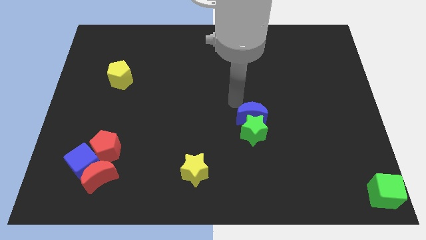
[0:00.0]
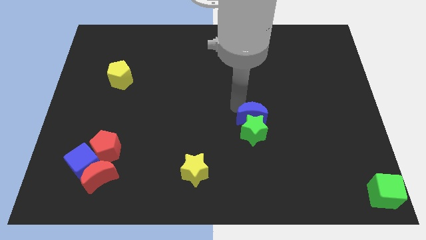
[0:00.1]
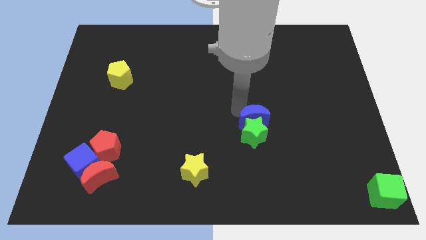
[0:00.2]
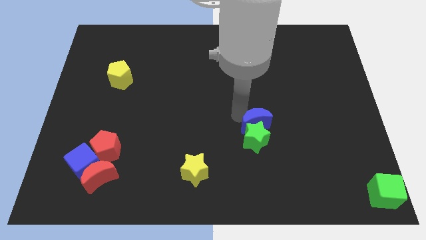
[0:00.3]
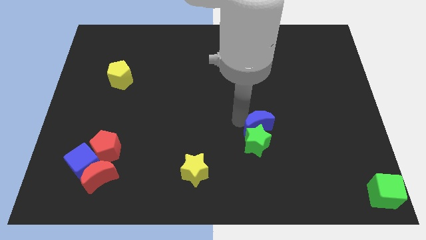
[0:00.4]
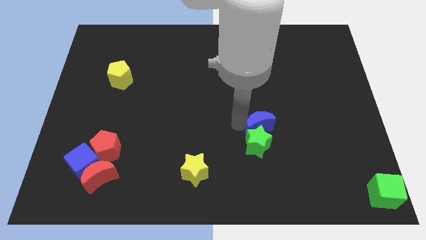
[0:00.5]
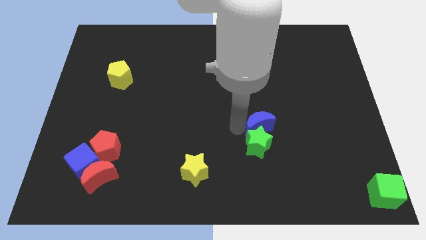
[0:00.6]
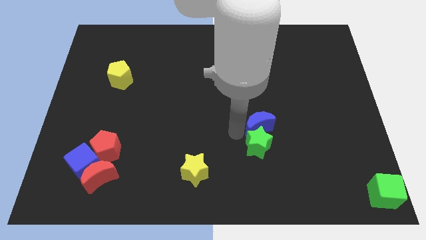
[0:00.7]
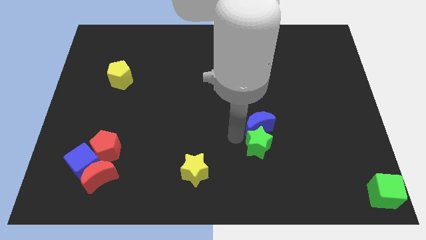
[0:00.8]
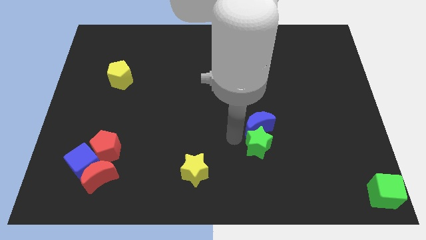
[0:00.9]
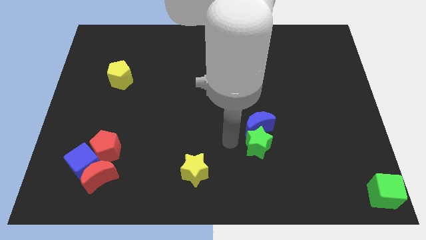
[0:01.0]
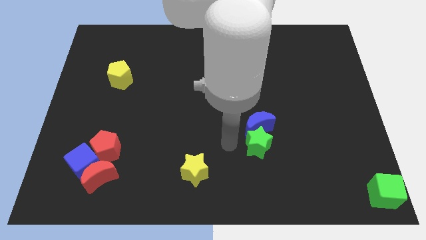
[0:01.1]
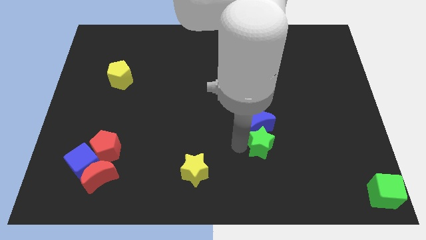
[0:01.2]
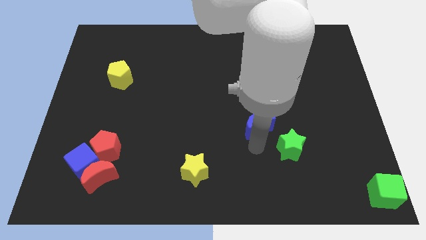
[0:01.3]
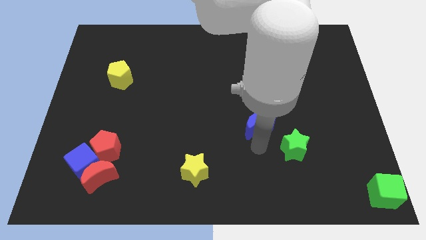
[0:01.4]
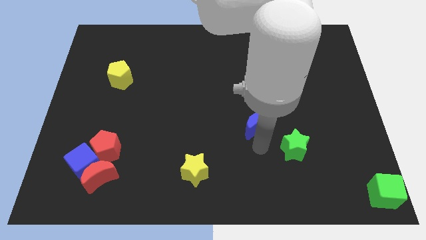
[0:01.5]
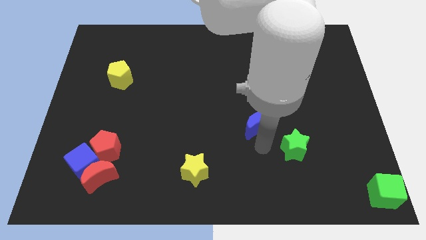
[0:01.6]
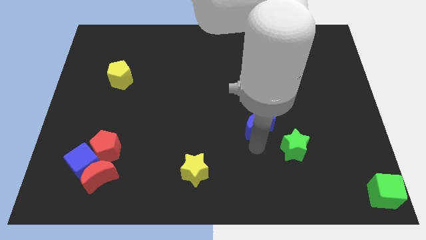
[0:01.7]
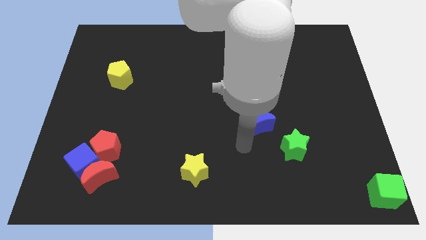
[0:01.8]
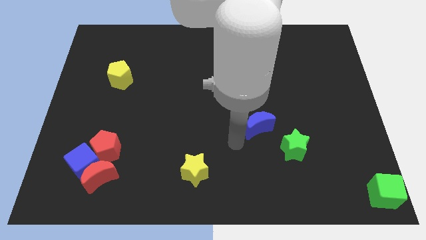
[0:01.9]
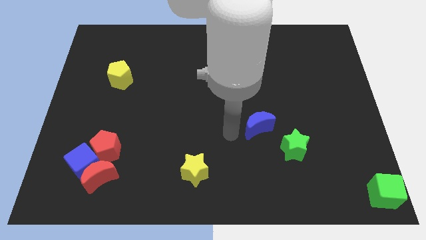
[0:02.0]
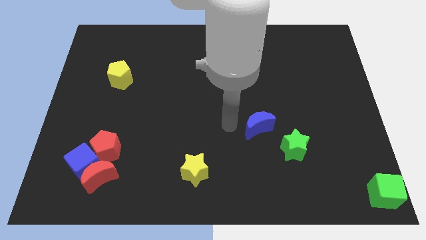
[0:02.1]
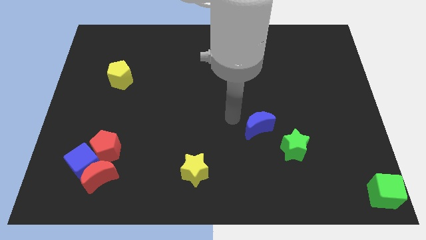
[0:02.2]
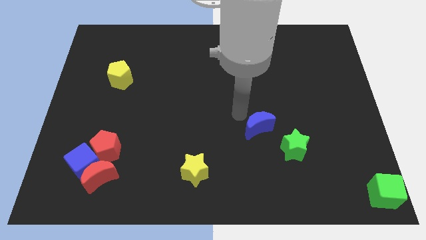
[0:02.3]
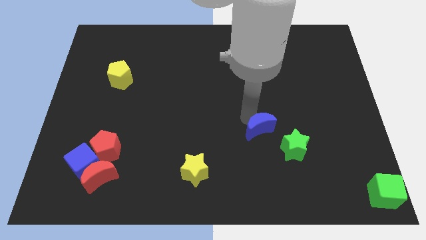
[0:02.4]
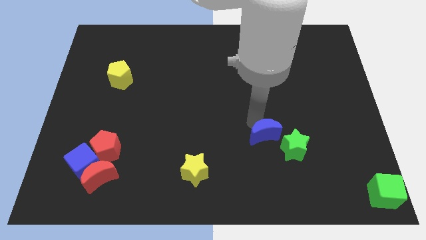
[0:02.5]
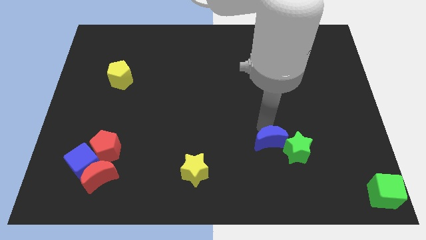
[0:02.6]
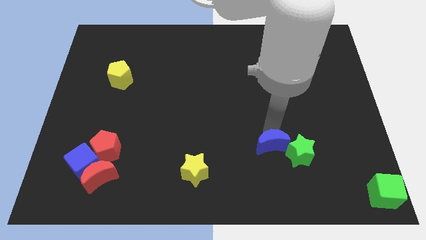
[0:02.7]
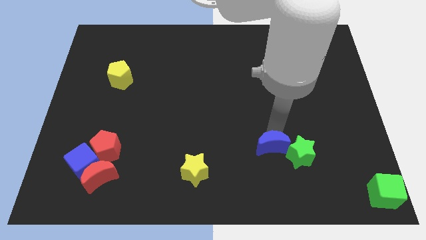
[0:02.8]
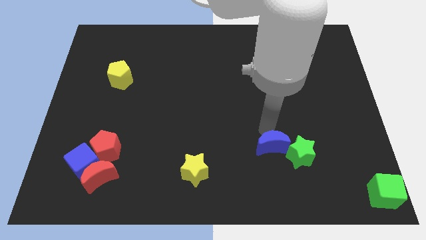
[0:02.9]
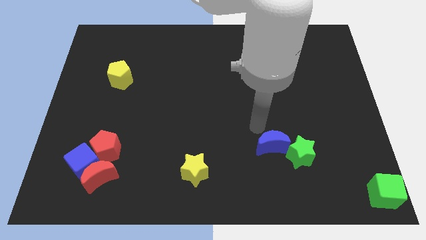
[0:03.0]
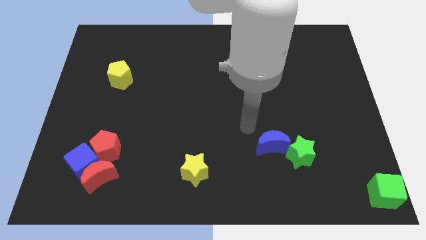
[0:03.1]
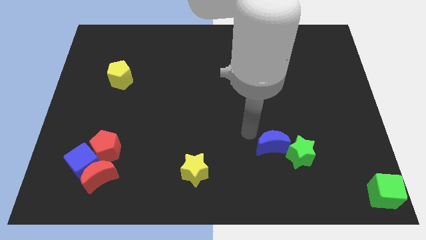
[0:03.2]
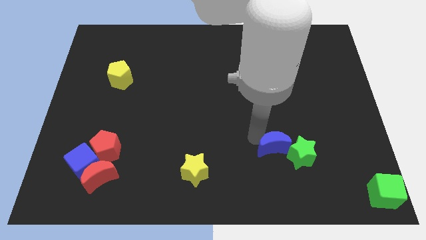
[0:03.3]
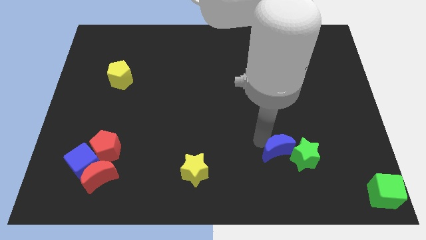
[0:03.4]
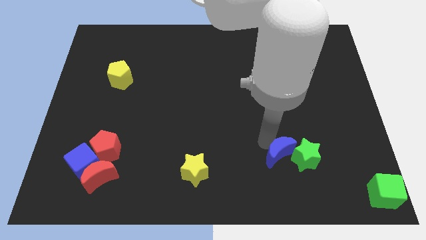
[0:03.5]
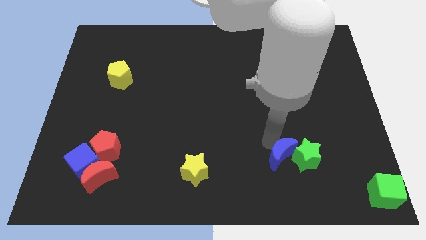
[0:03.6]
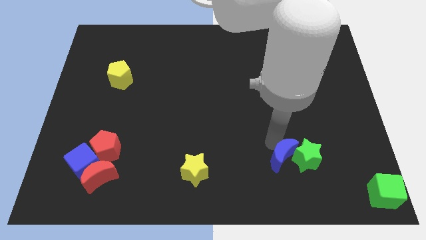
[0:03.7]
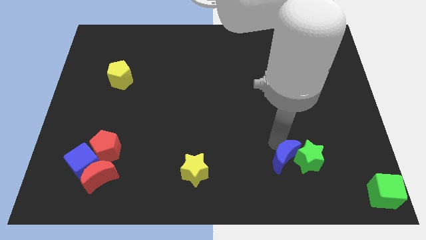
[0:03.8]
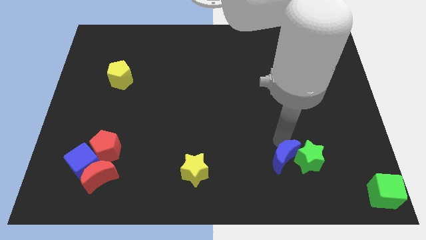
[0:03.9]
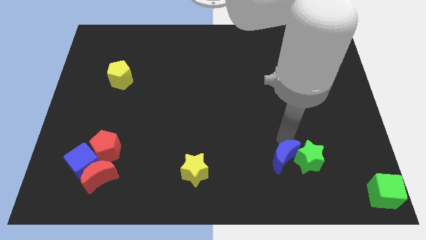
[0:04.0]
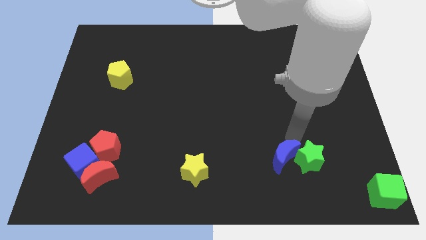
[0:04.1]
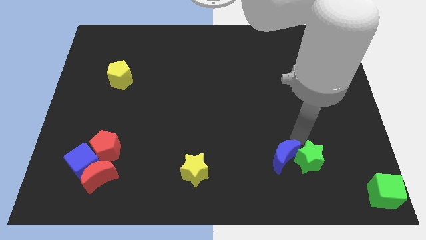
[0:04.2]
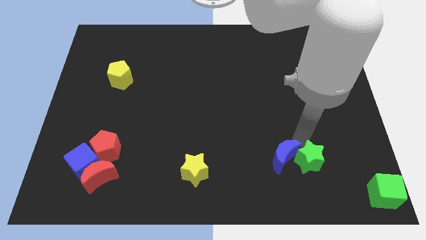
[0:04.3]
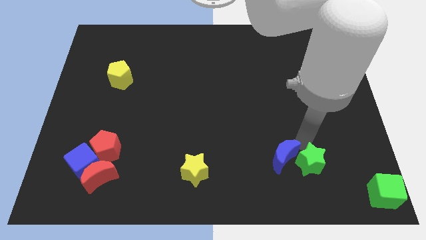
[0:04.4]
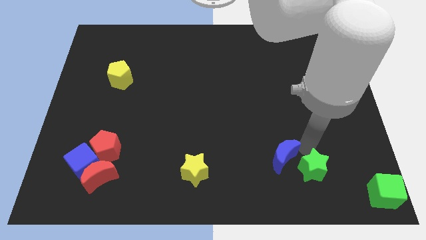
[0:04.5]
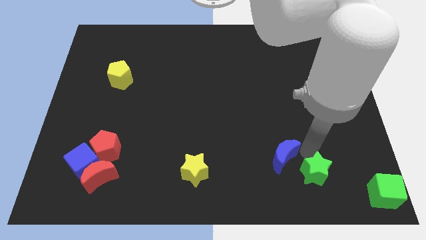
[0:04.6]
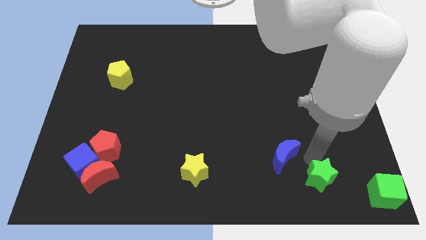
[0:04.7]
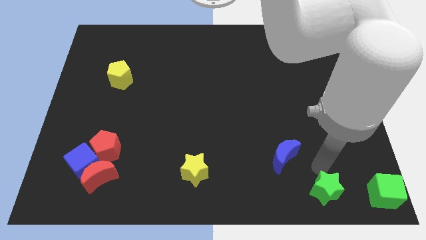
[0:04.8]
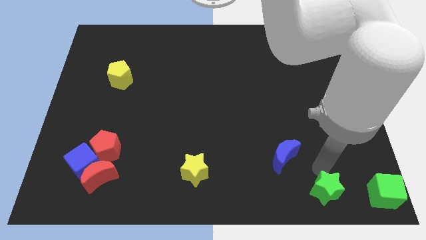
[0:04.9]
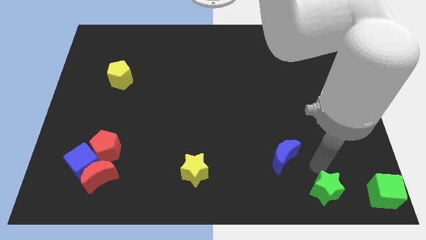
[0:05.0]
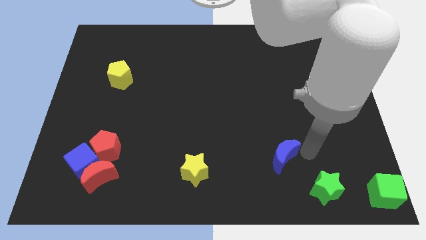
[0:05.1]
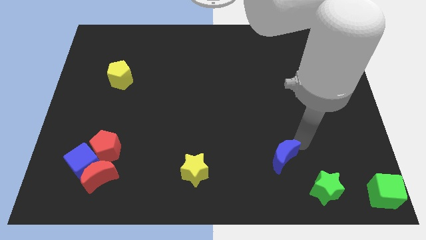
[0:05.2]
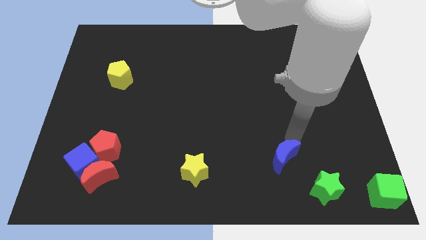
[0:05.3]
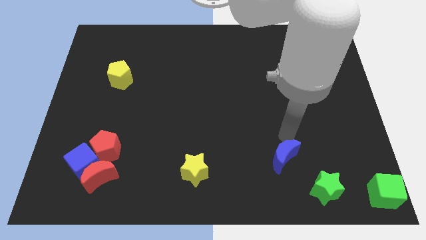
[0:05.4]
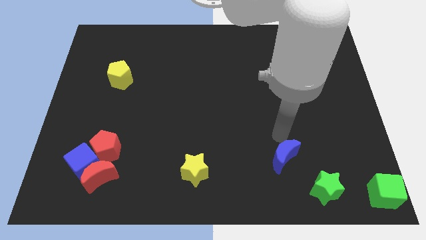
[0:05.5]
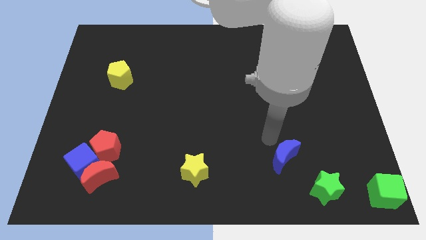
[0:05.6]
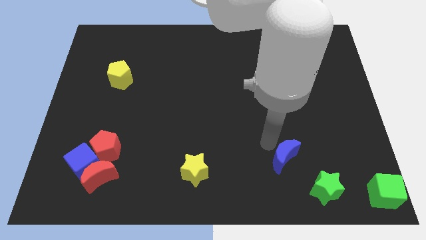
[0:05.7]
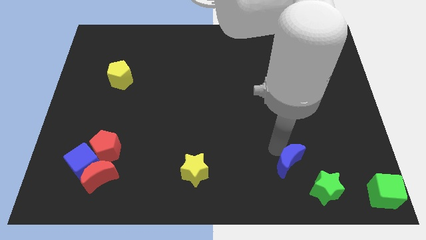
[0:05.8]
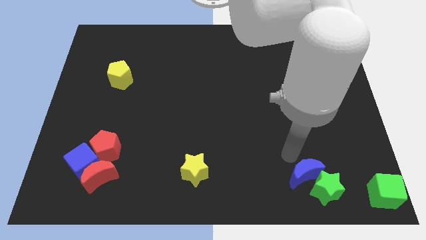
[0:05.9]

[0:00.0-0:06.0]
move the blue crescent and green star towards bottom left

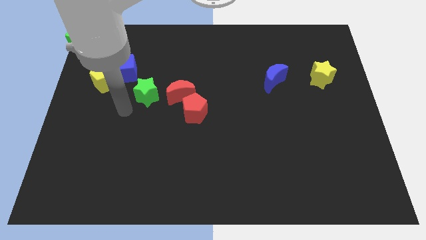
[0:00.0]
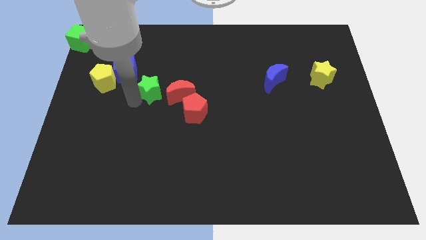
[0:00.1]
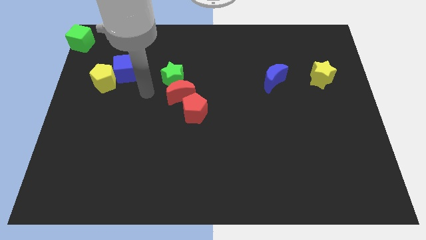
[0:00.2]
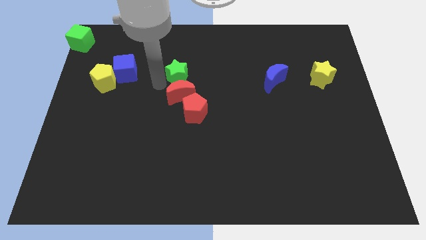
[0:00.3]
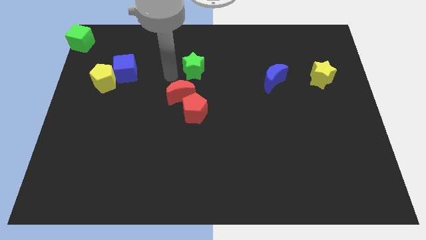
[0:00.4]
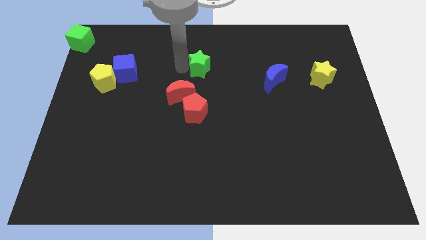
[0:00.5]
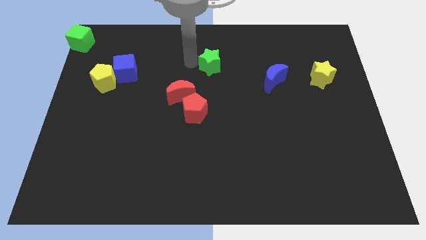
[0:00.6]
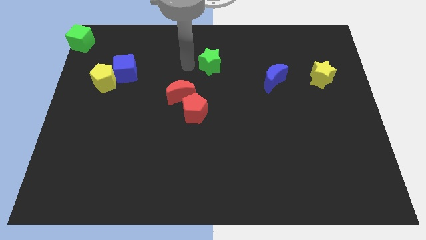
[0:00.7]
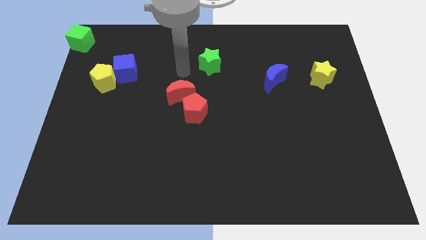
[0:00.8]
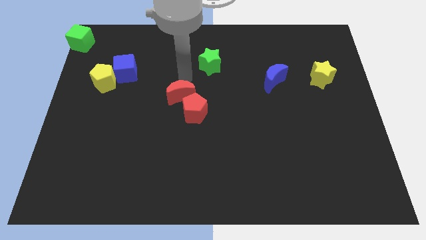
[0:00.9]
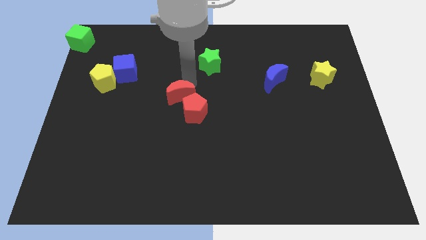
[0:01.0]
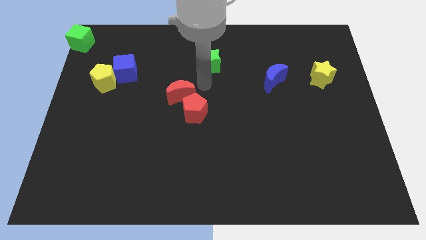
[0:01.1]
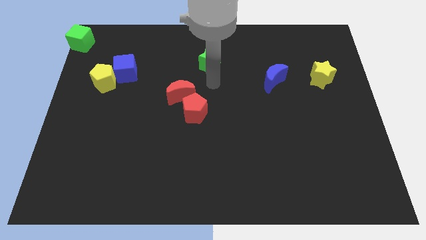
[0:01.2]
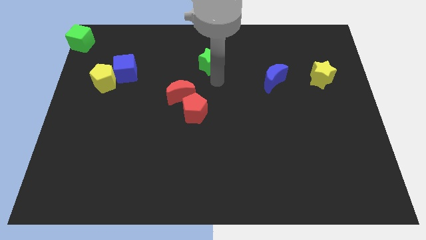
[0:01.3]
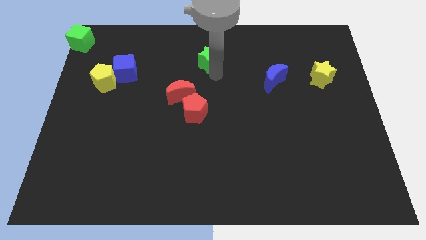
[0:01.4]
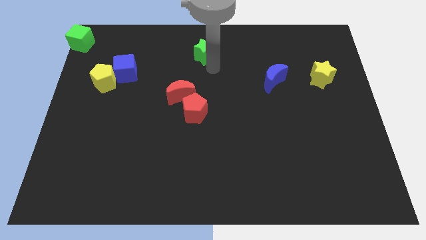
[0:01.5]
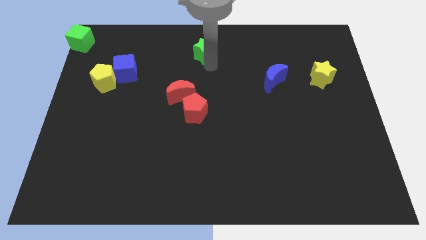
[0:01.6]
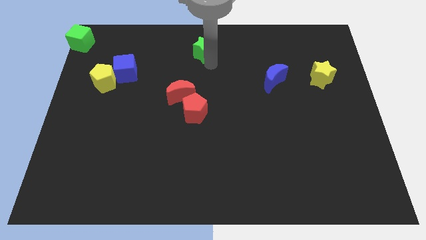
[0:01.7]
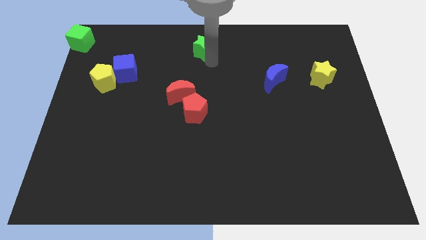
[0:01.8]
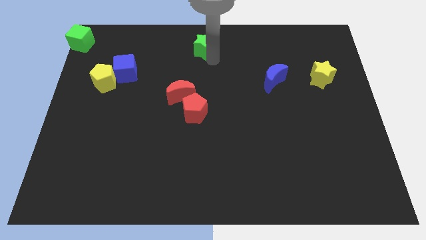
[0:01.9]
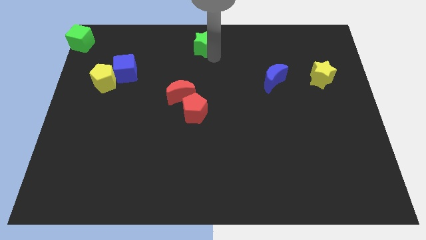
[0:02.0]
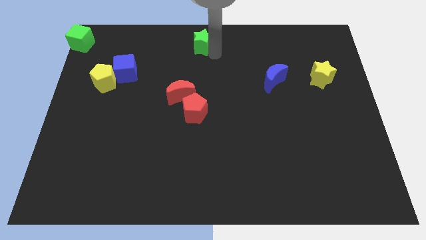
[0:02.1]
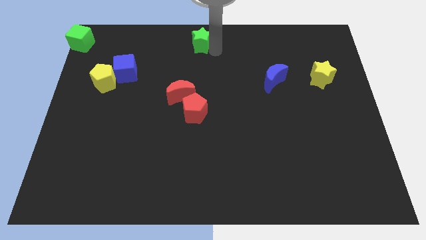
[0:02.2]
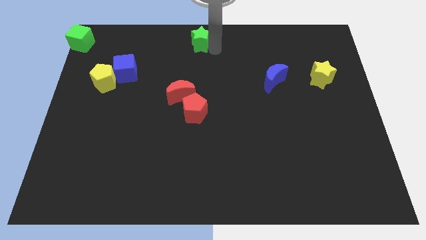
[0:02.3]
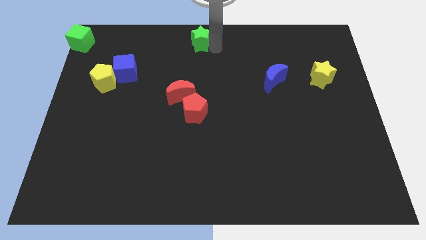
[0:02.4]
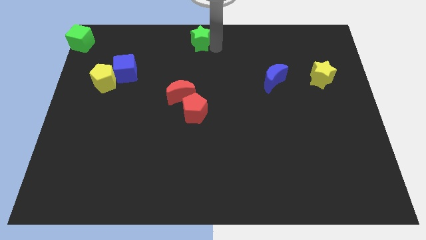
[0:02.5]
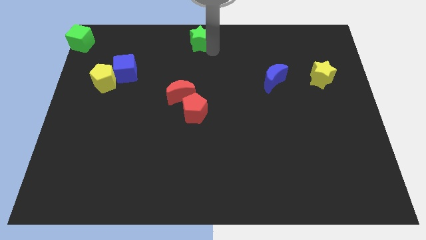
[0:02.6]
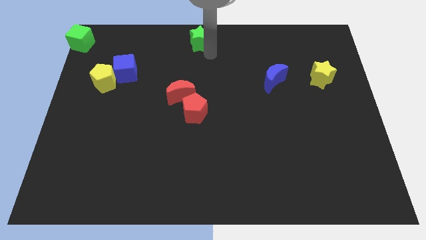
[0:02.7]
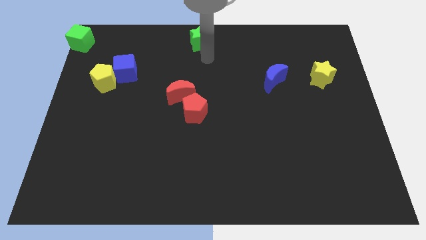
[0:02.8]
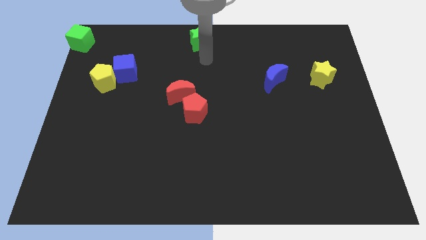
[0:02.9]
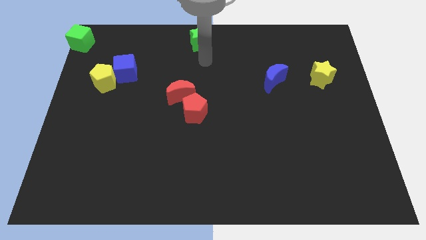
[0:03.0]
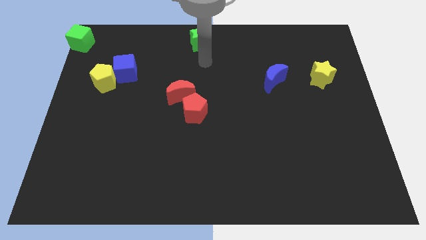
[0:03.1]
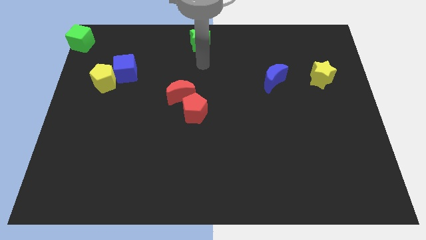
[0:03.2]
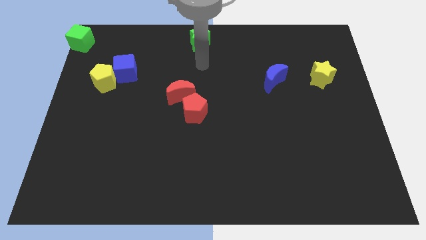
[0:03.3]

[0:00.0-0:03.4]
move the green star to the top side center
